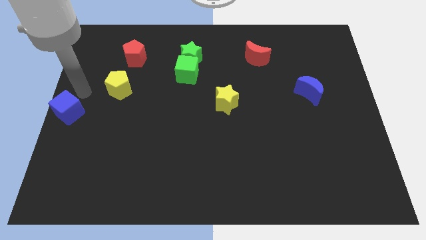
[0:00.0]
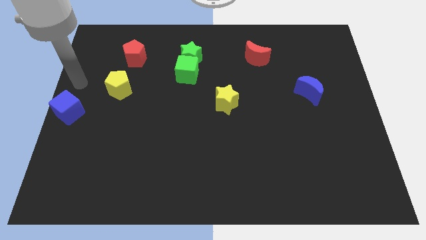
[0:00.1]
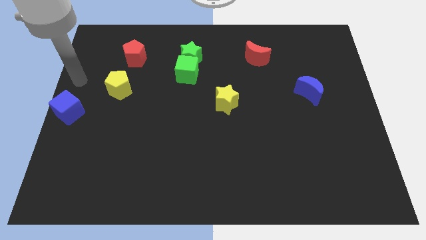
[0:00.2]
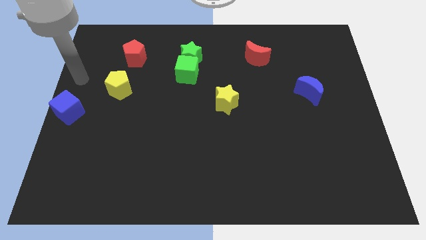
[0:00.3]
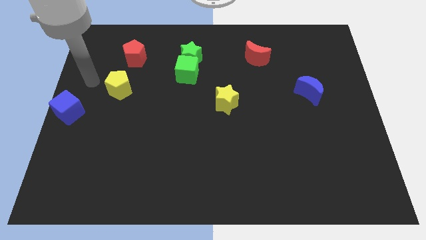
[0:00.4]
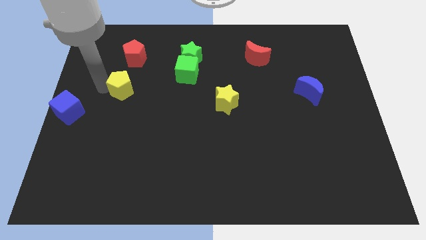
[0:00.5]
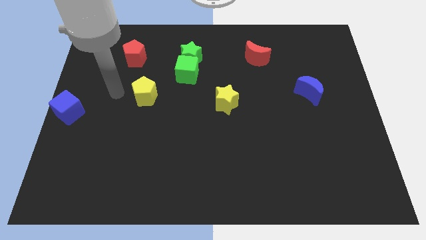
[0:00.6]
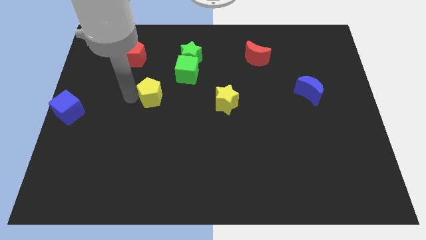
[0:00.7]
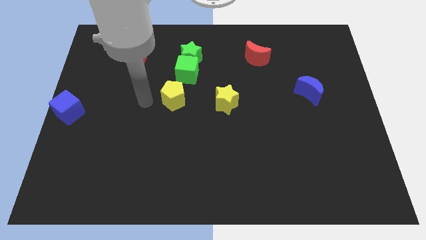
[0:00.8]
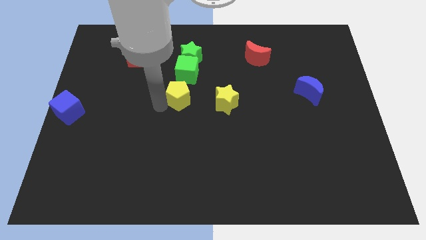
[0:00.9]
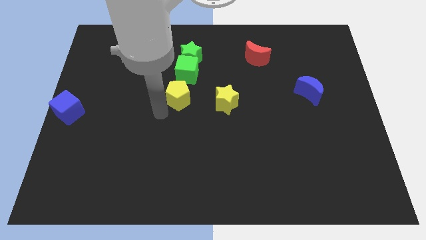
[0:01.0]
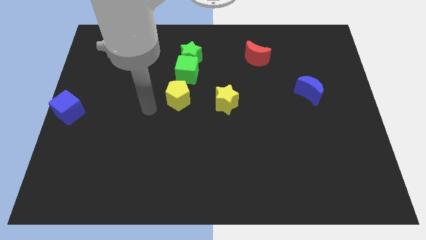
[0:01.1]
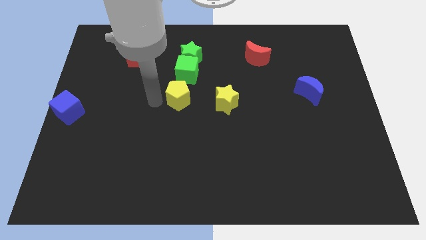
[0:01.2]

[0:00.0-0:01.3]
move yellow pentagon below green cube

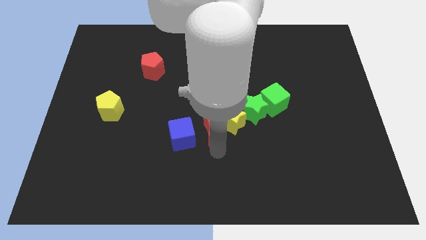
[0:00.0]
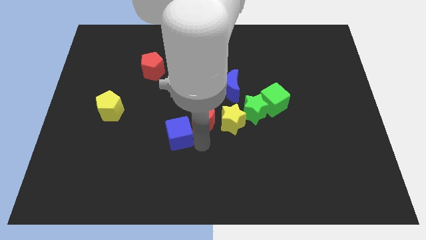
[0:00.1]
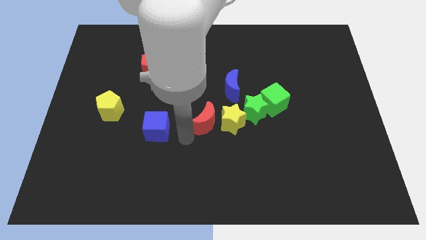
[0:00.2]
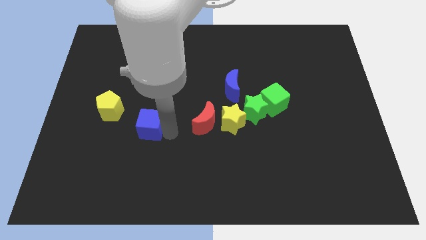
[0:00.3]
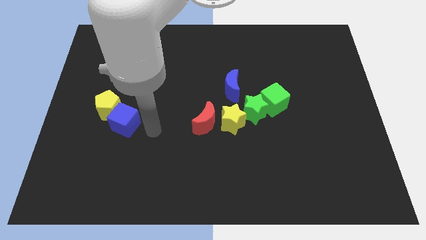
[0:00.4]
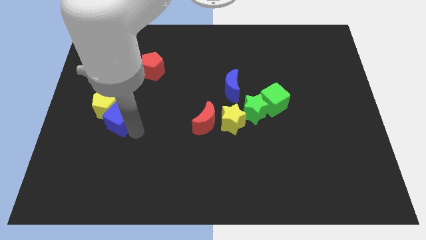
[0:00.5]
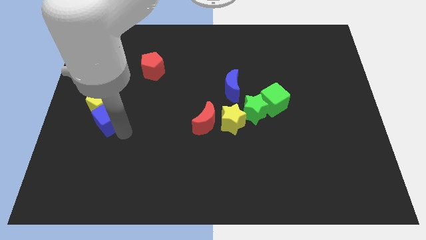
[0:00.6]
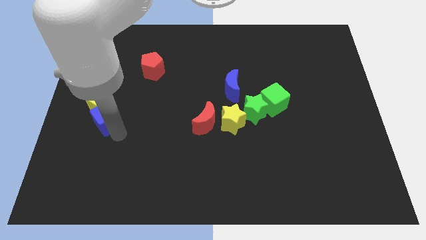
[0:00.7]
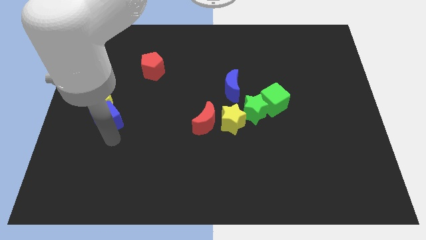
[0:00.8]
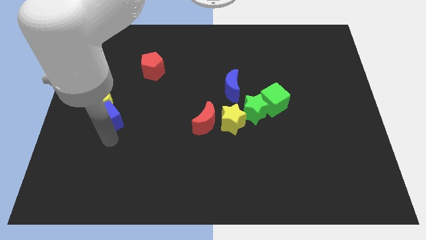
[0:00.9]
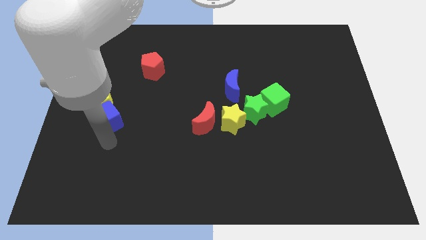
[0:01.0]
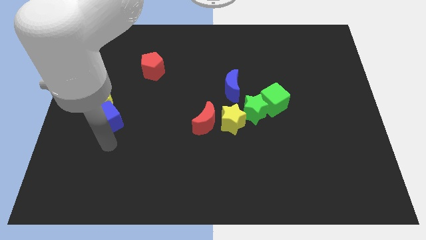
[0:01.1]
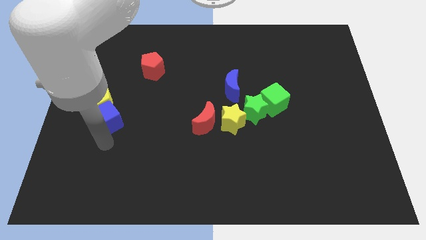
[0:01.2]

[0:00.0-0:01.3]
push the blue cube into the yellow pentagon

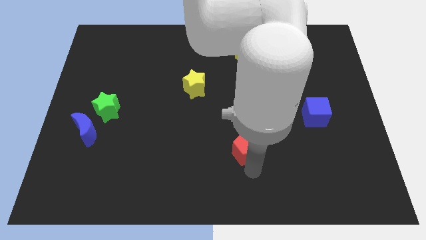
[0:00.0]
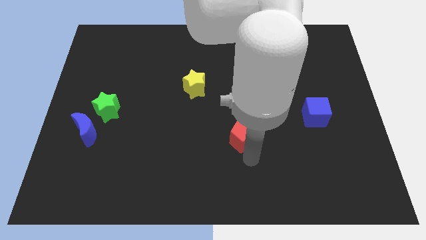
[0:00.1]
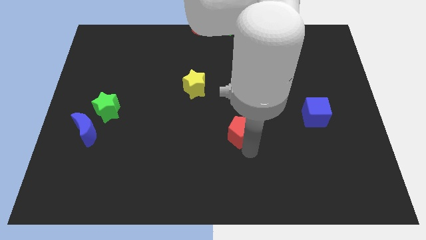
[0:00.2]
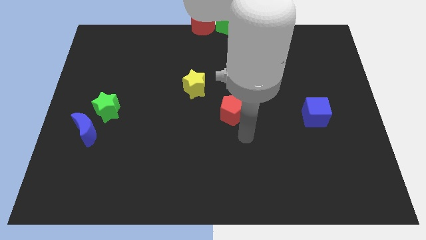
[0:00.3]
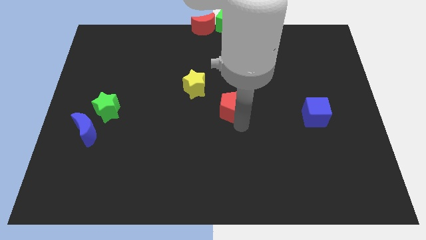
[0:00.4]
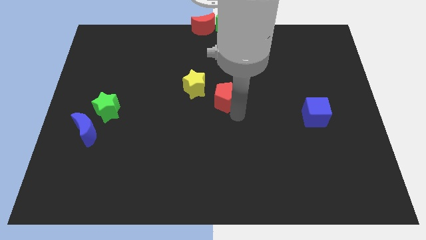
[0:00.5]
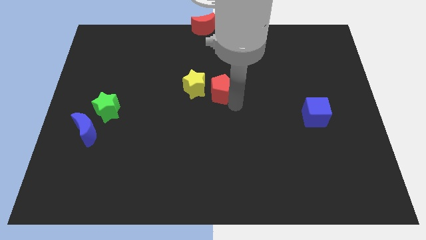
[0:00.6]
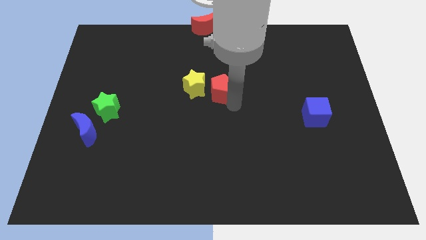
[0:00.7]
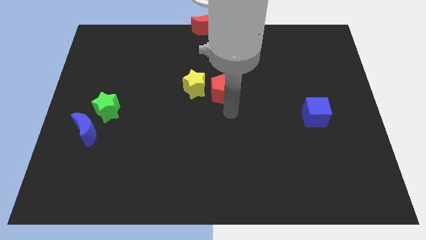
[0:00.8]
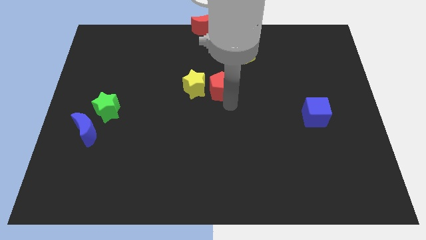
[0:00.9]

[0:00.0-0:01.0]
place the red pentagon close to the yellow star

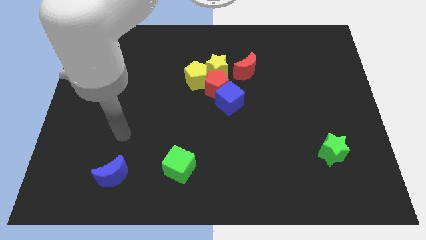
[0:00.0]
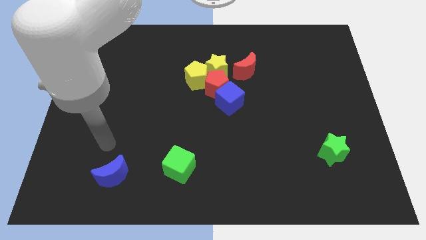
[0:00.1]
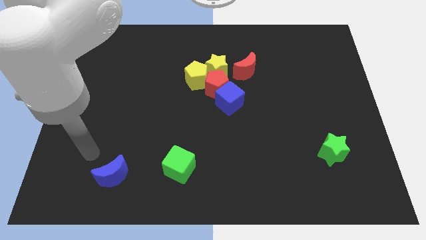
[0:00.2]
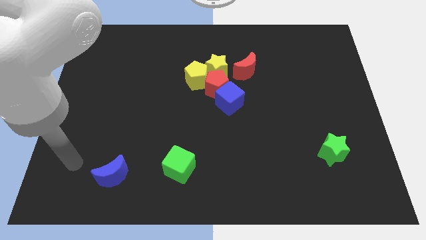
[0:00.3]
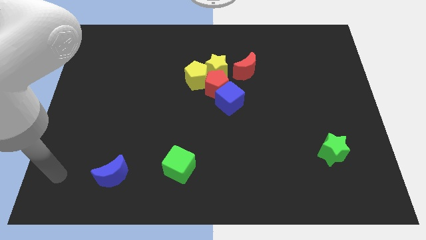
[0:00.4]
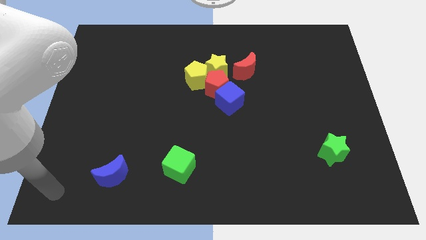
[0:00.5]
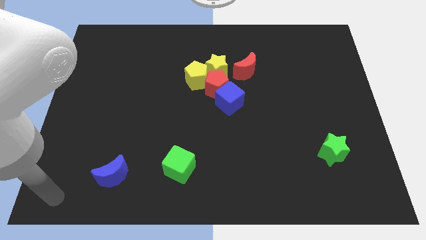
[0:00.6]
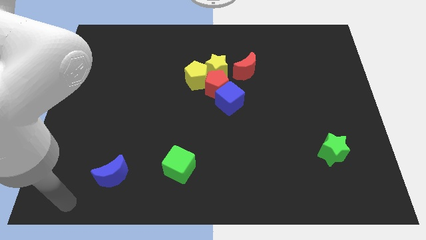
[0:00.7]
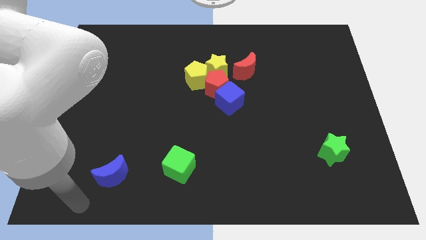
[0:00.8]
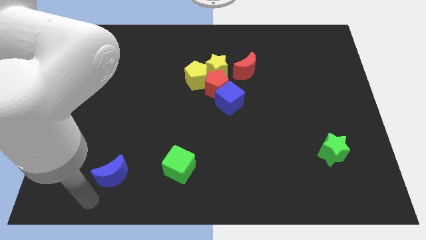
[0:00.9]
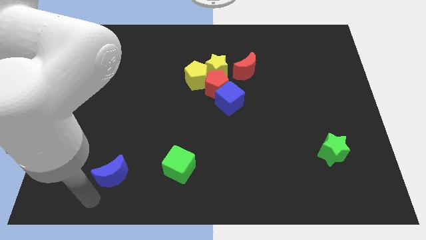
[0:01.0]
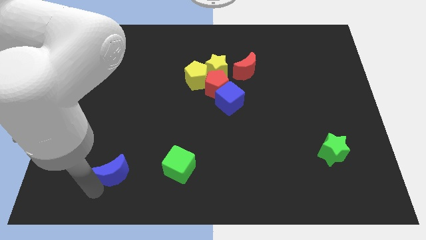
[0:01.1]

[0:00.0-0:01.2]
place the arm below the blue crescent

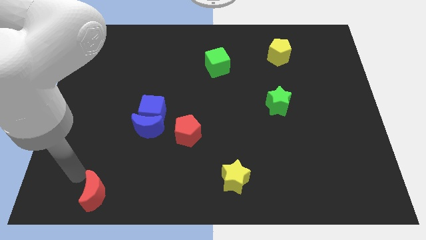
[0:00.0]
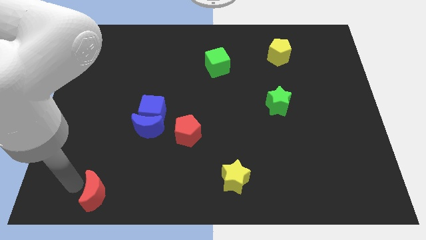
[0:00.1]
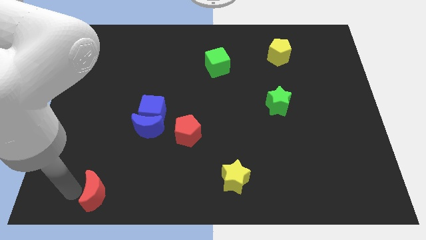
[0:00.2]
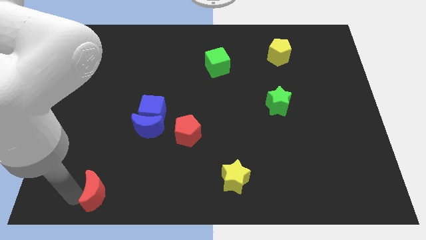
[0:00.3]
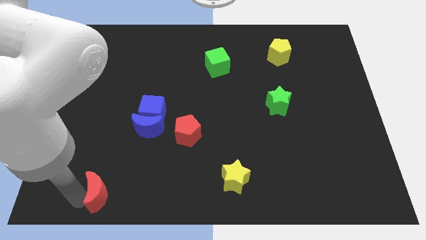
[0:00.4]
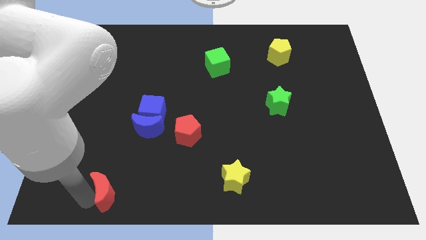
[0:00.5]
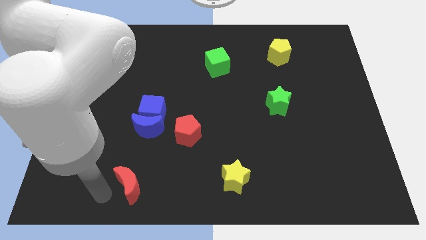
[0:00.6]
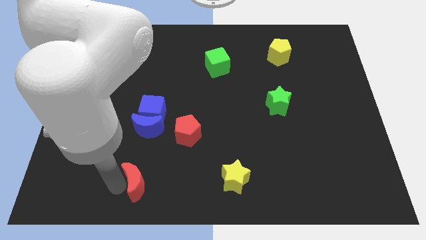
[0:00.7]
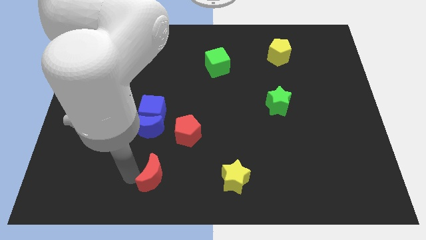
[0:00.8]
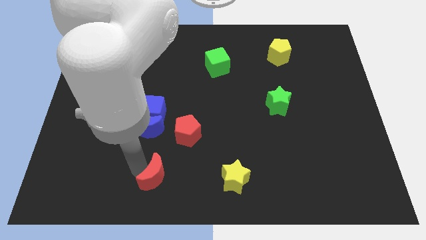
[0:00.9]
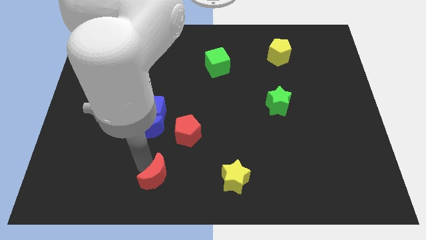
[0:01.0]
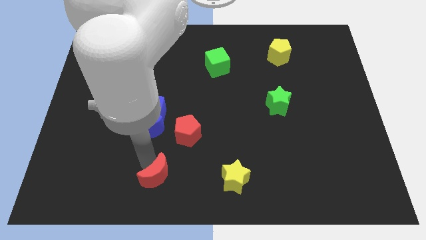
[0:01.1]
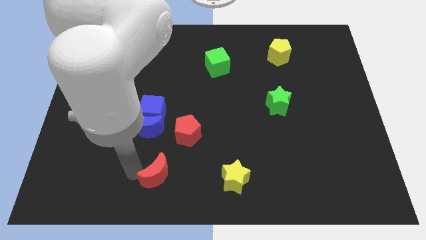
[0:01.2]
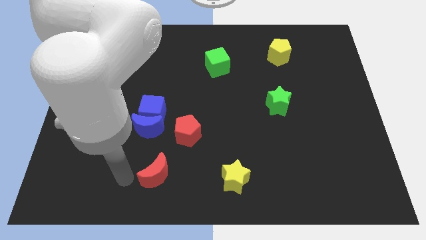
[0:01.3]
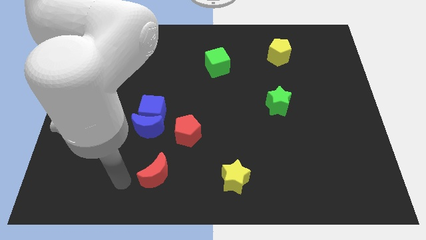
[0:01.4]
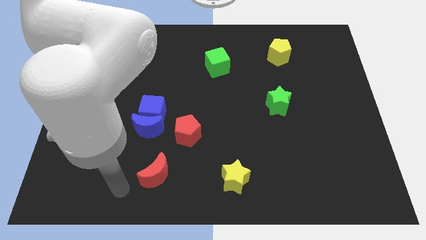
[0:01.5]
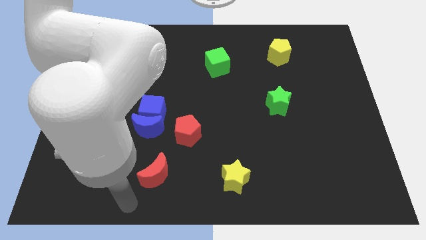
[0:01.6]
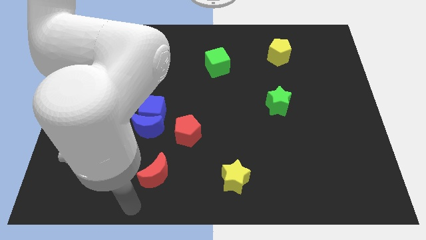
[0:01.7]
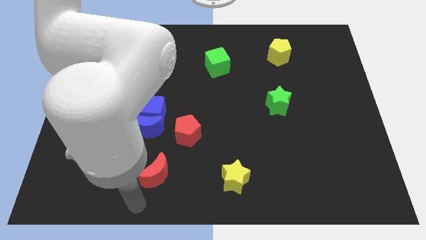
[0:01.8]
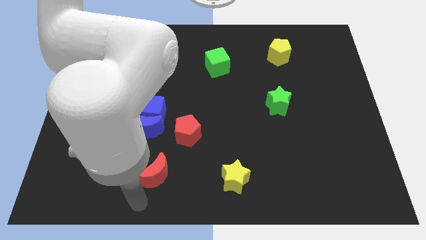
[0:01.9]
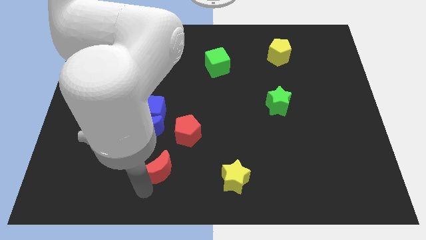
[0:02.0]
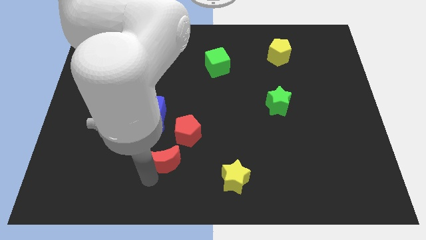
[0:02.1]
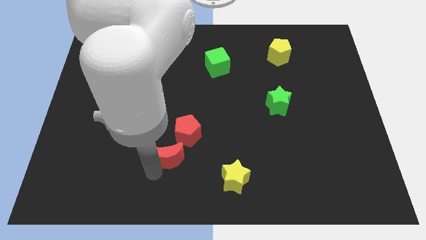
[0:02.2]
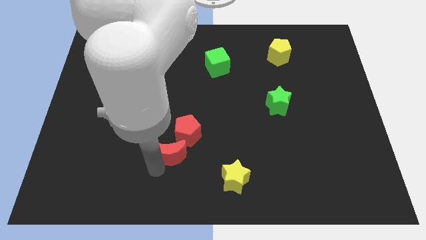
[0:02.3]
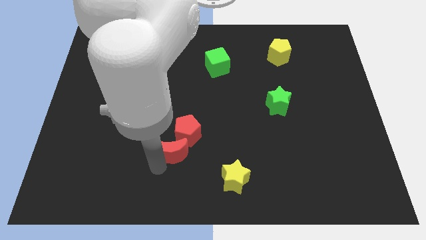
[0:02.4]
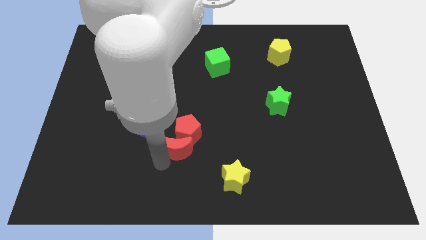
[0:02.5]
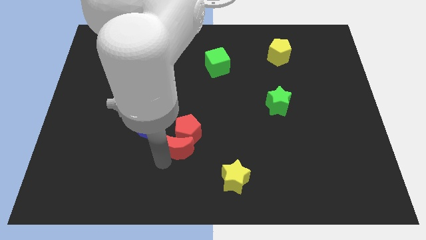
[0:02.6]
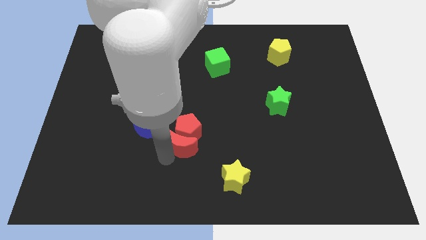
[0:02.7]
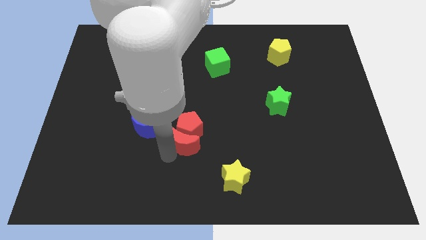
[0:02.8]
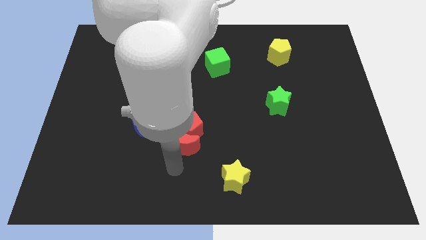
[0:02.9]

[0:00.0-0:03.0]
move the red crescent into the red pentagon

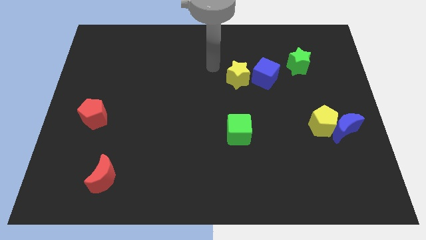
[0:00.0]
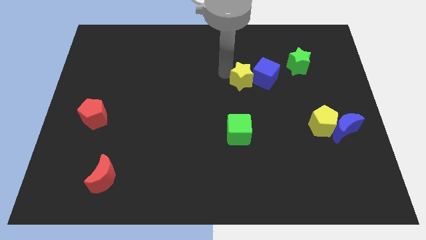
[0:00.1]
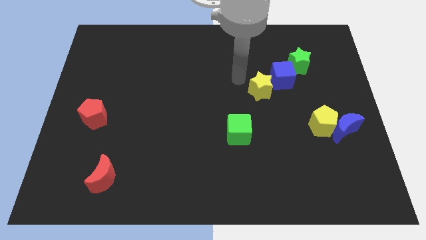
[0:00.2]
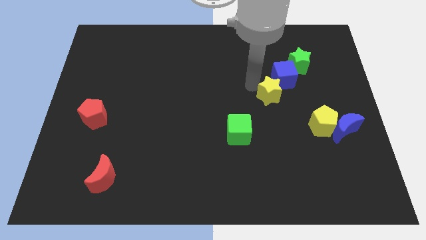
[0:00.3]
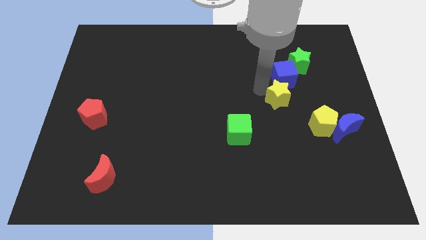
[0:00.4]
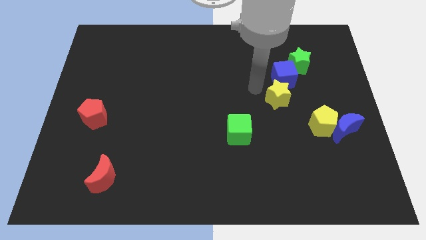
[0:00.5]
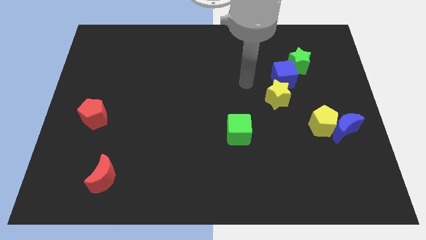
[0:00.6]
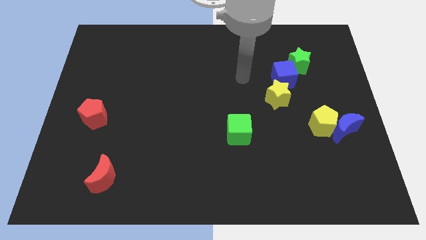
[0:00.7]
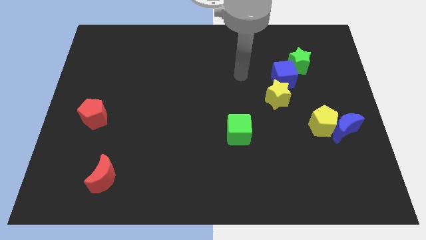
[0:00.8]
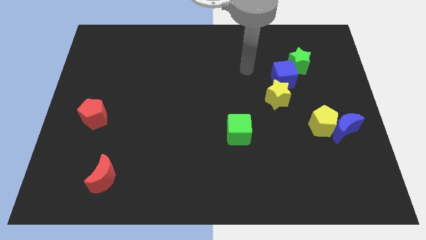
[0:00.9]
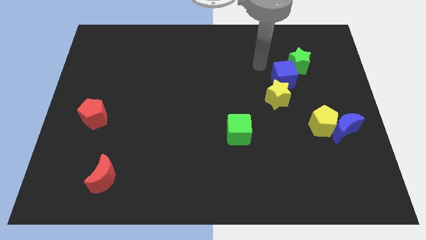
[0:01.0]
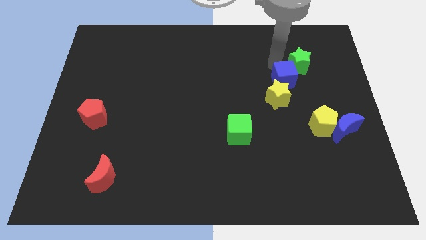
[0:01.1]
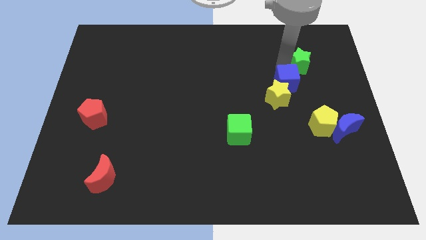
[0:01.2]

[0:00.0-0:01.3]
place your arm to the top of blue cube
